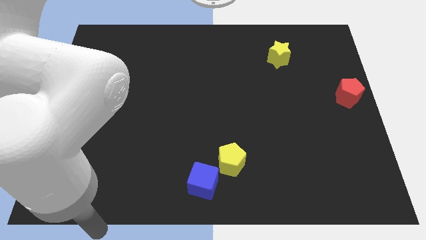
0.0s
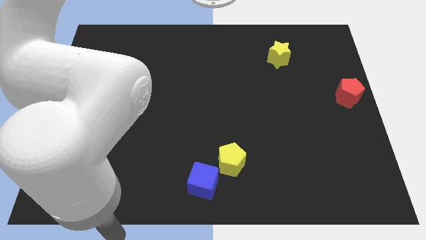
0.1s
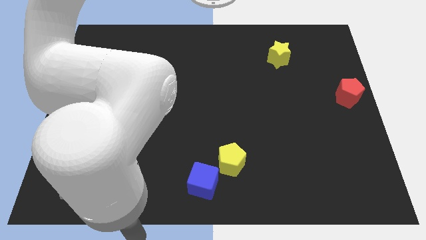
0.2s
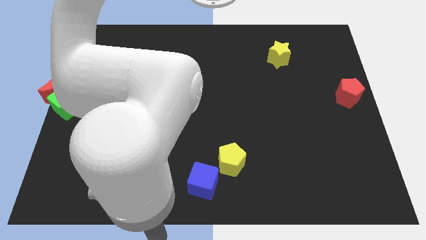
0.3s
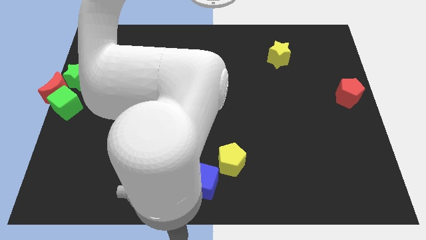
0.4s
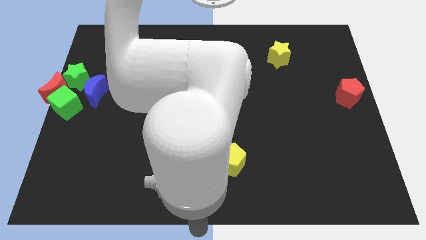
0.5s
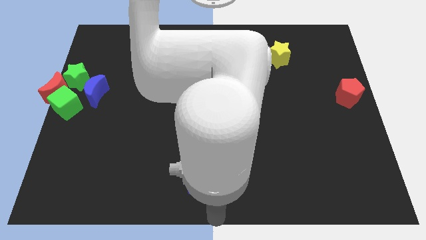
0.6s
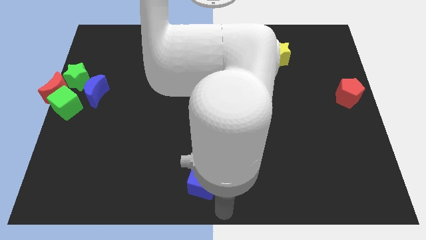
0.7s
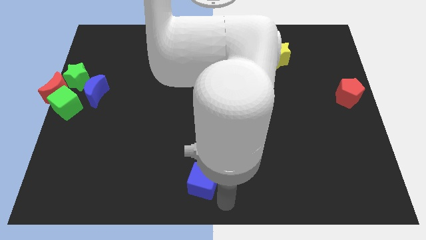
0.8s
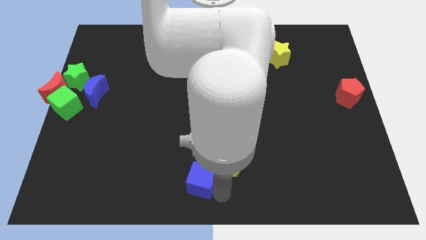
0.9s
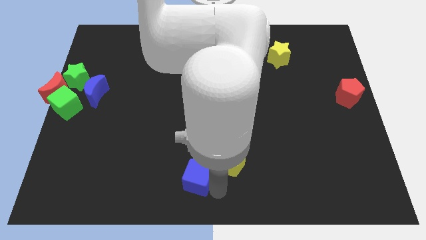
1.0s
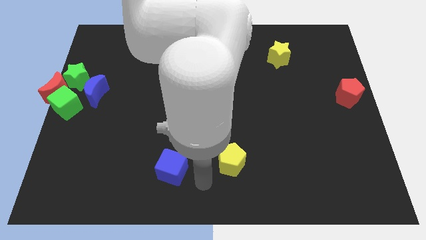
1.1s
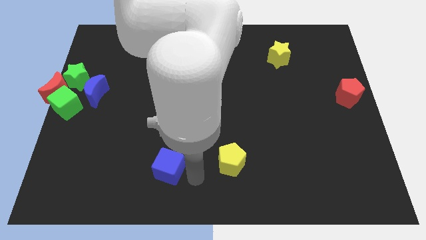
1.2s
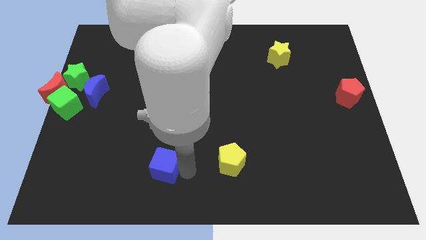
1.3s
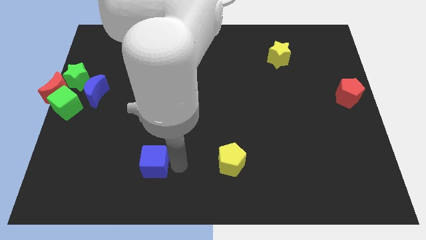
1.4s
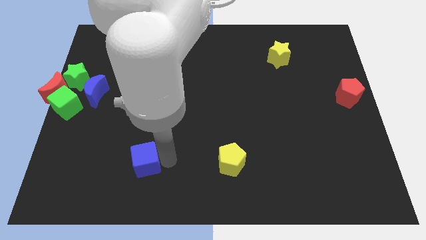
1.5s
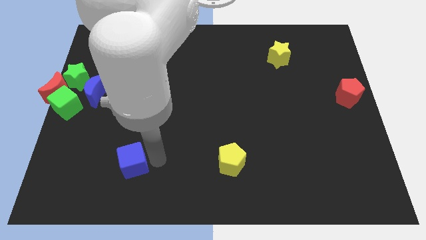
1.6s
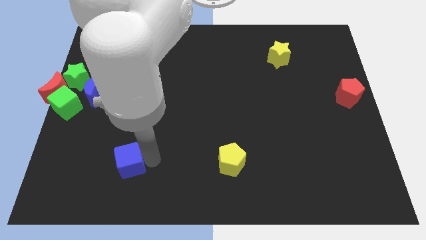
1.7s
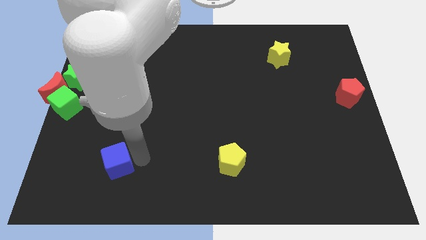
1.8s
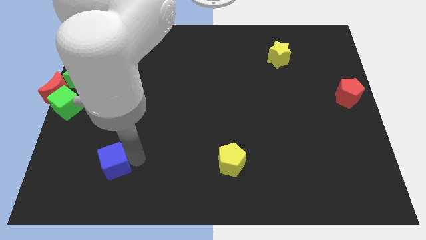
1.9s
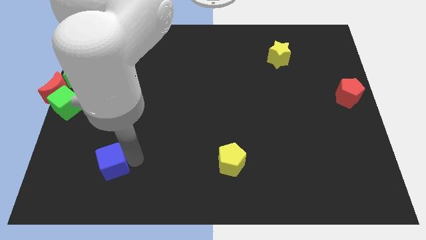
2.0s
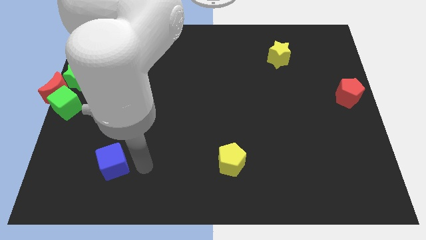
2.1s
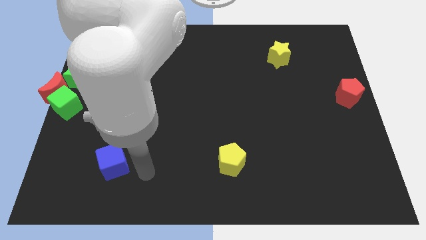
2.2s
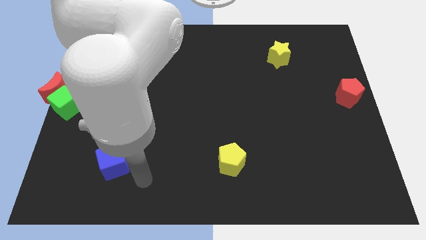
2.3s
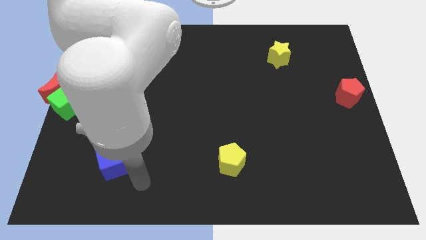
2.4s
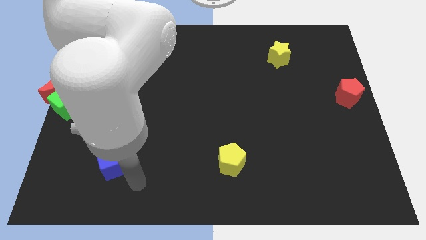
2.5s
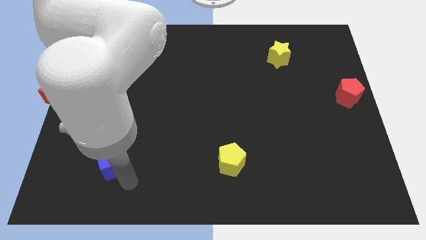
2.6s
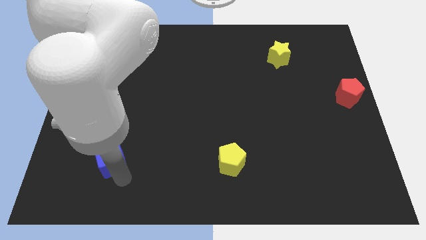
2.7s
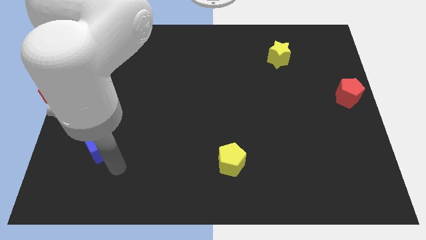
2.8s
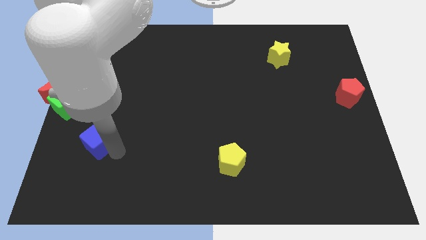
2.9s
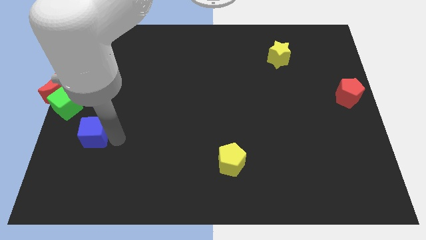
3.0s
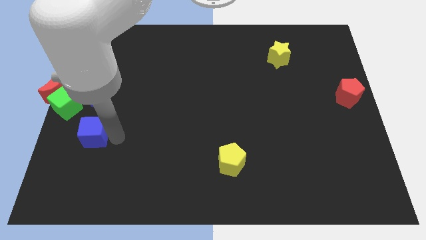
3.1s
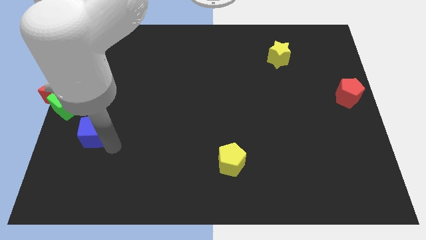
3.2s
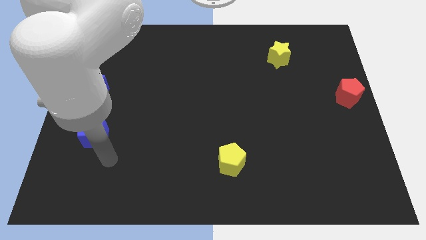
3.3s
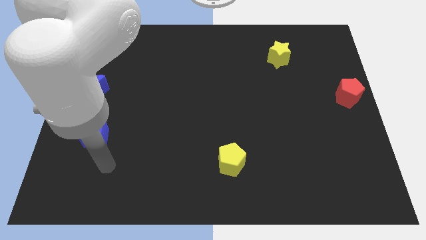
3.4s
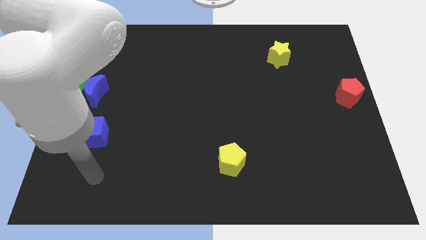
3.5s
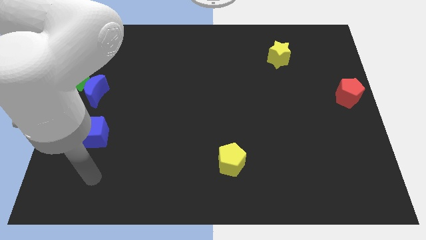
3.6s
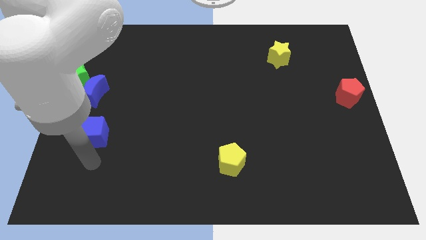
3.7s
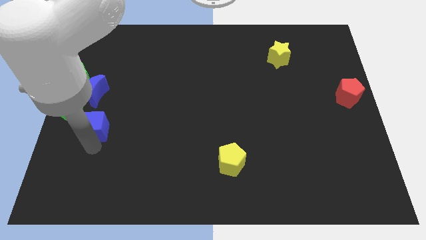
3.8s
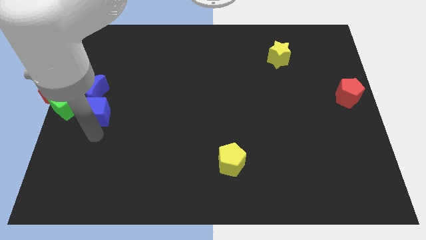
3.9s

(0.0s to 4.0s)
place the blue cube below the blue moon

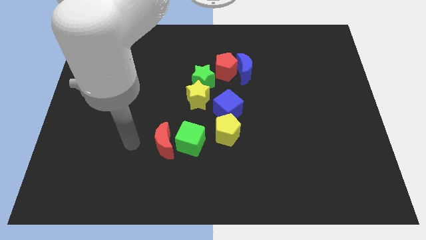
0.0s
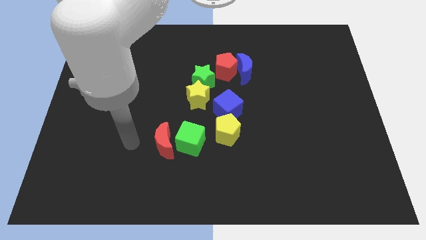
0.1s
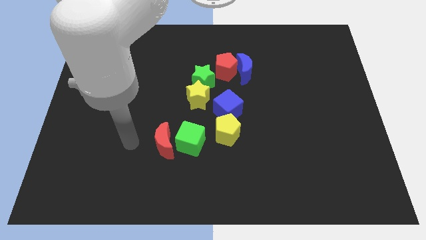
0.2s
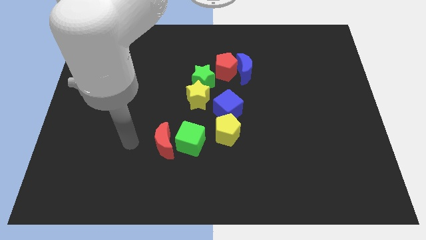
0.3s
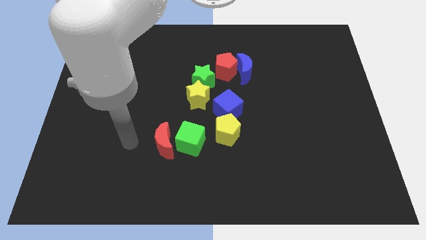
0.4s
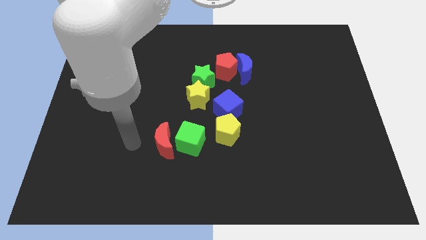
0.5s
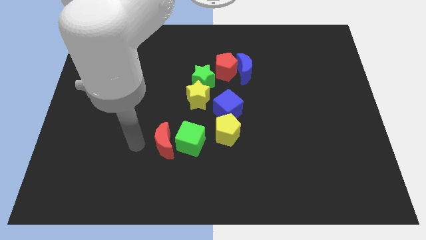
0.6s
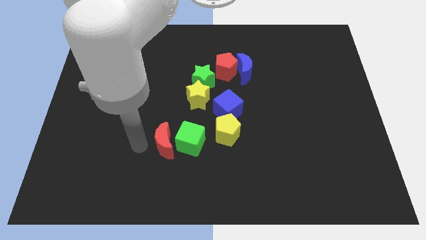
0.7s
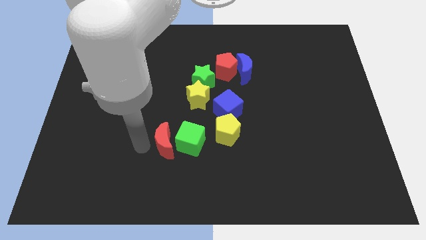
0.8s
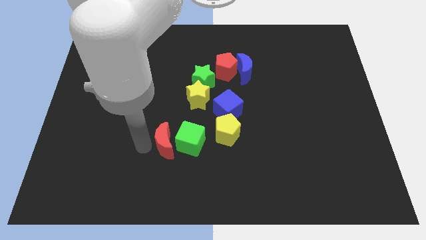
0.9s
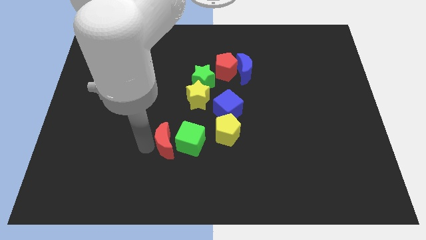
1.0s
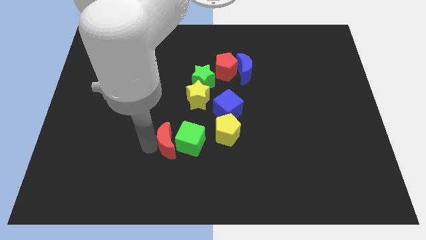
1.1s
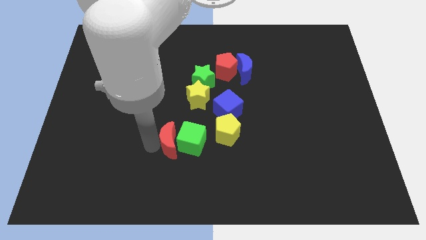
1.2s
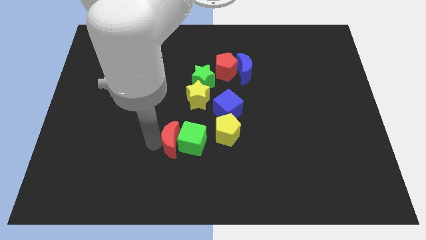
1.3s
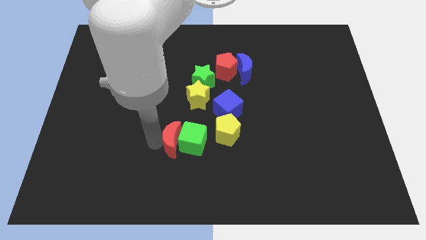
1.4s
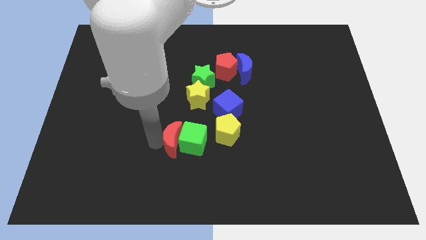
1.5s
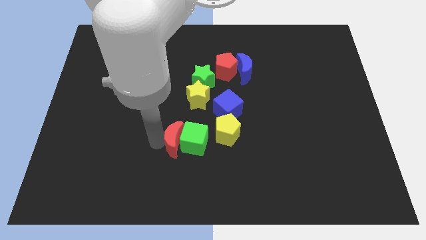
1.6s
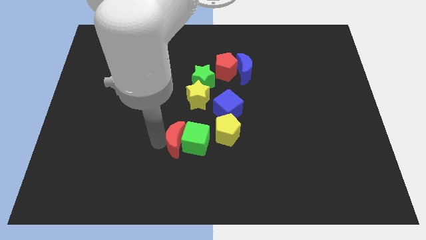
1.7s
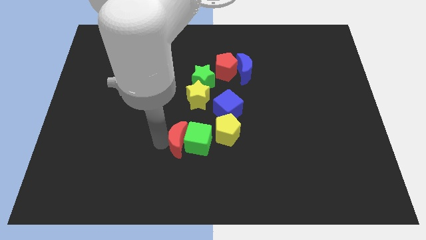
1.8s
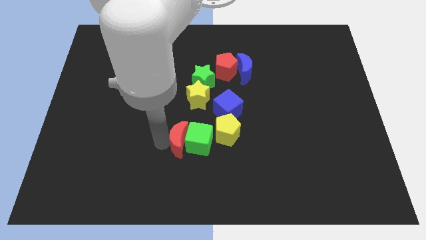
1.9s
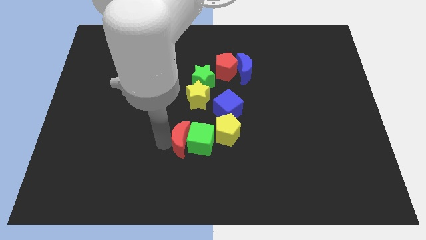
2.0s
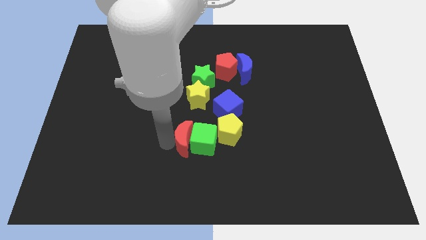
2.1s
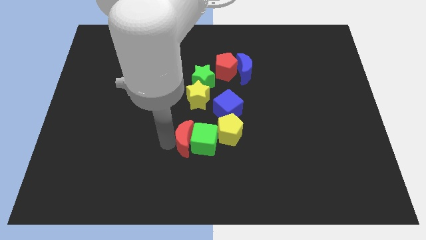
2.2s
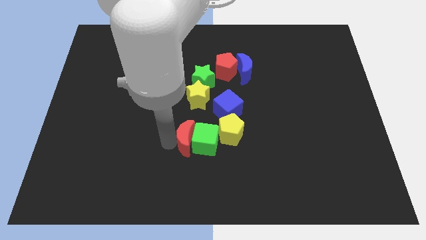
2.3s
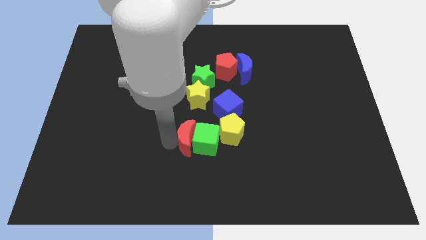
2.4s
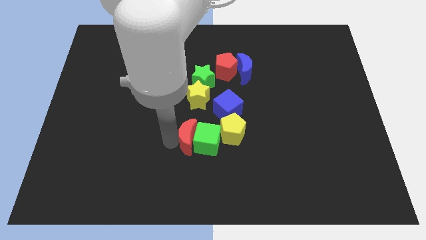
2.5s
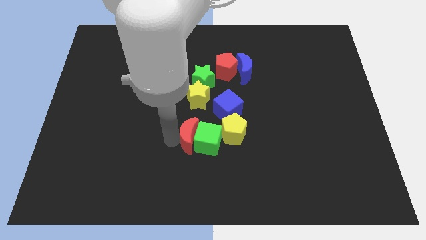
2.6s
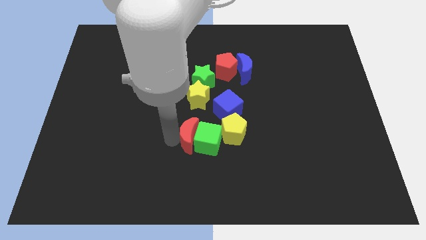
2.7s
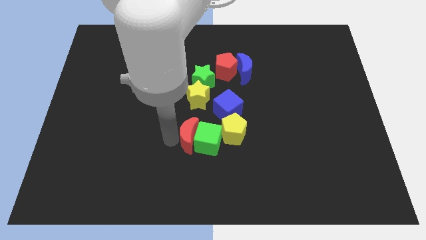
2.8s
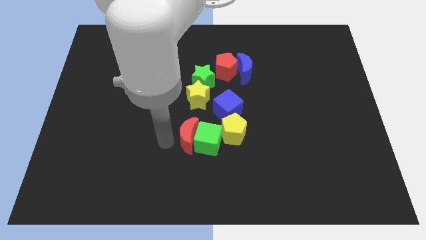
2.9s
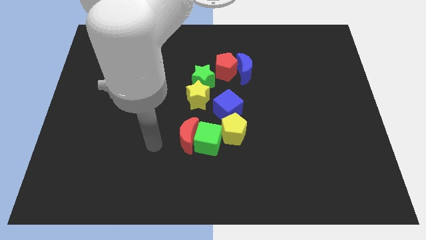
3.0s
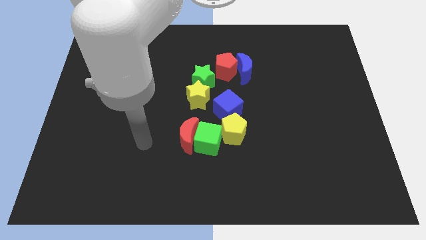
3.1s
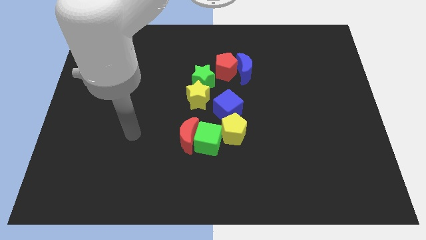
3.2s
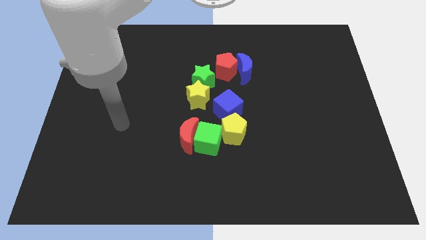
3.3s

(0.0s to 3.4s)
move your arm away from the red moon

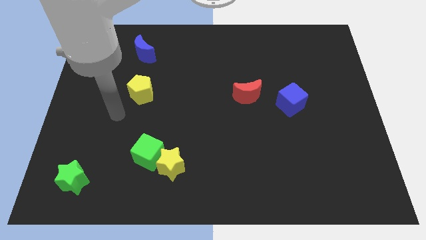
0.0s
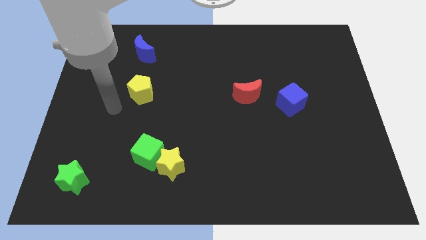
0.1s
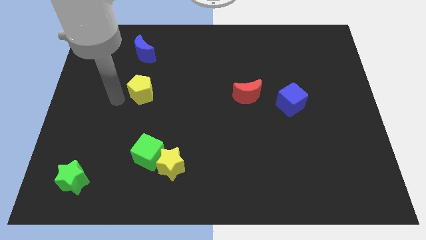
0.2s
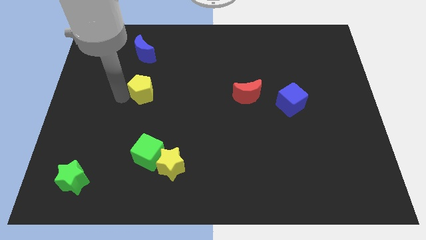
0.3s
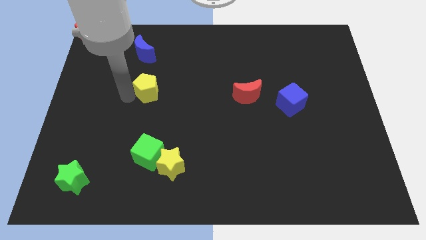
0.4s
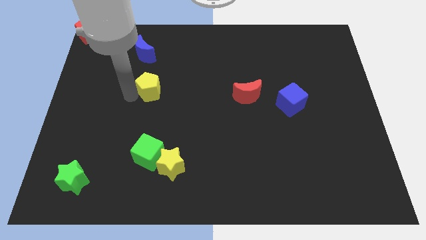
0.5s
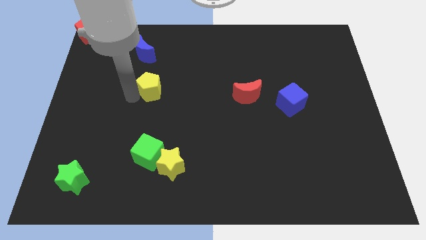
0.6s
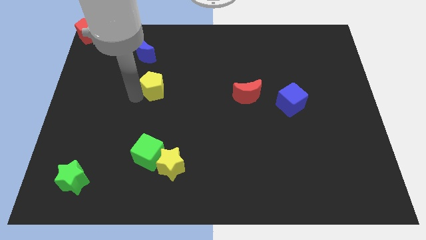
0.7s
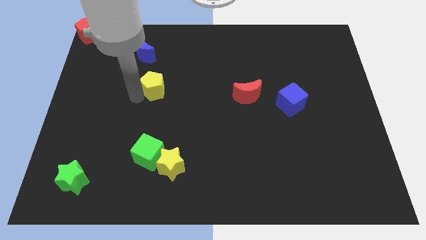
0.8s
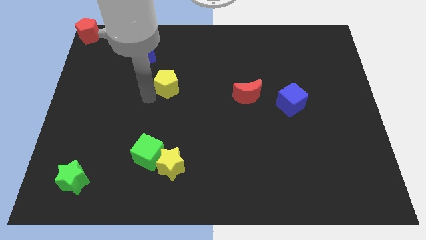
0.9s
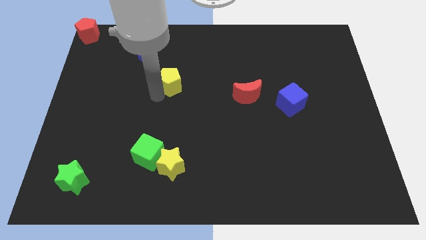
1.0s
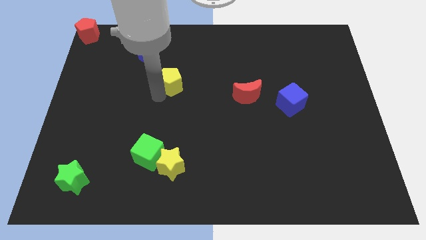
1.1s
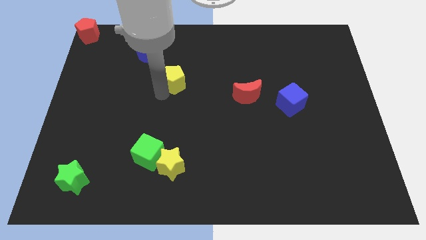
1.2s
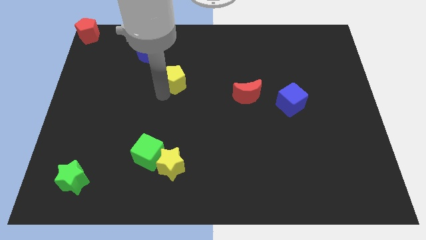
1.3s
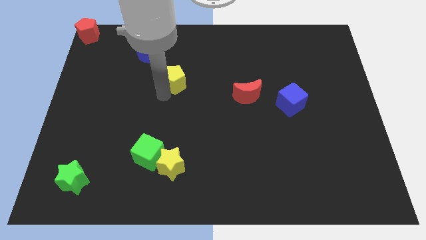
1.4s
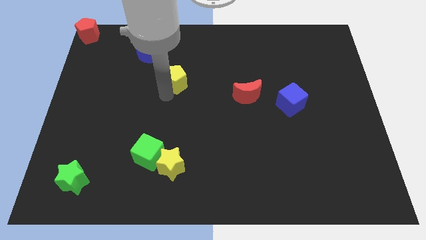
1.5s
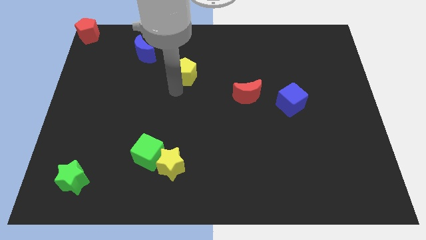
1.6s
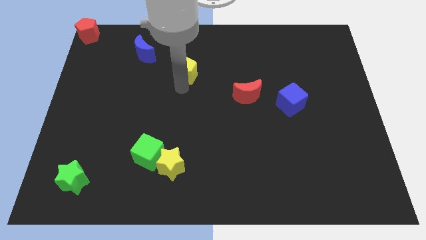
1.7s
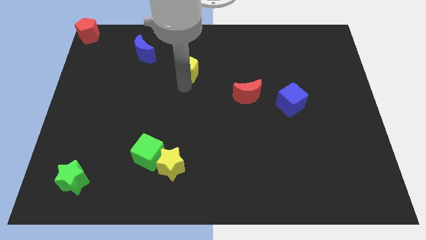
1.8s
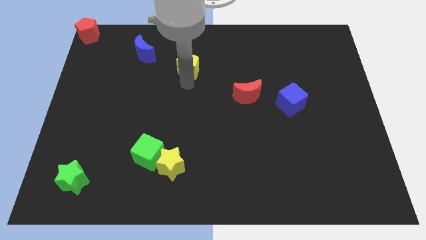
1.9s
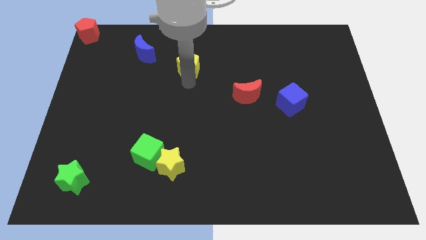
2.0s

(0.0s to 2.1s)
put the yellow pentagon in between blue crescent and red crescent
